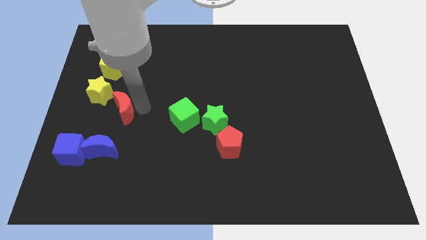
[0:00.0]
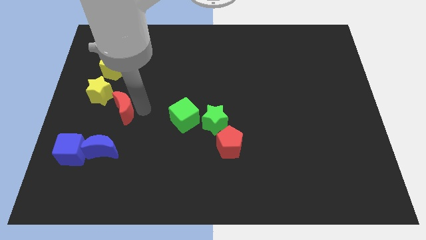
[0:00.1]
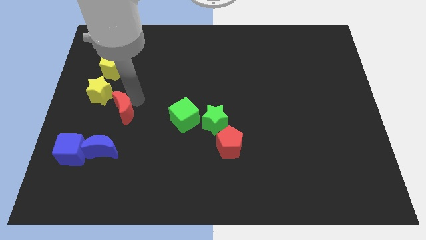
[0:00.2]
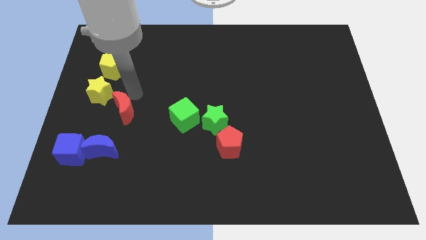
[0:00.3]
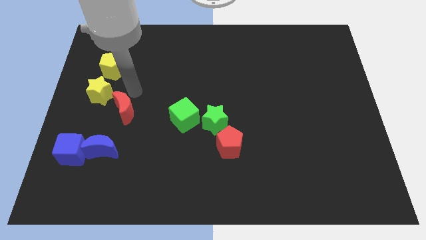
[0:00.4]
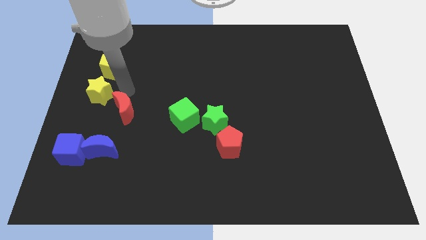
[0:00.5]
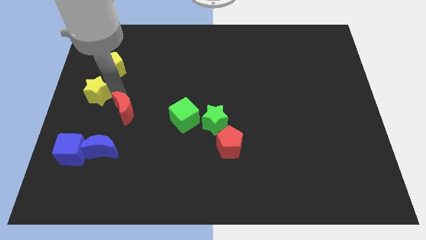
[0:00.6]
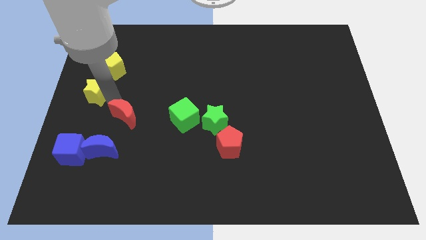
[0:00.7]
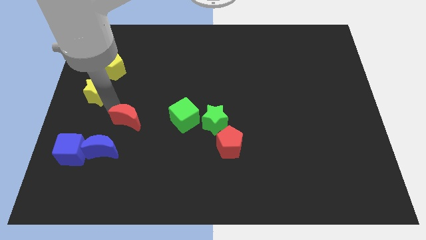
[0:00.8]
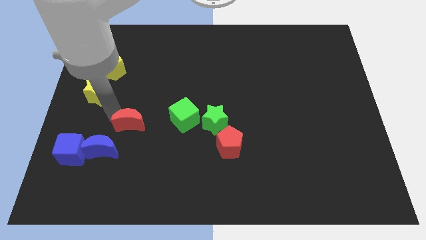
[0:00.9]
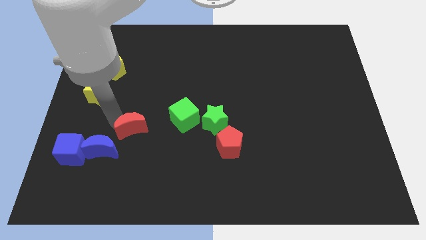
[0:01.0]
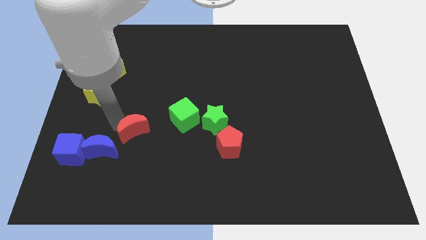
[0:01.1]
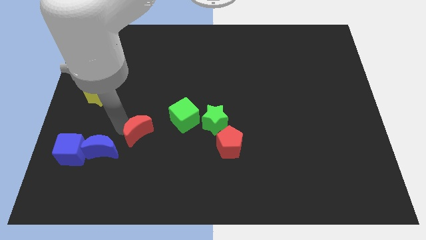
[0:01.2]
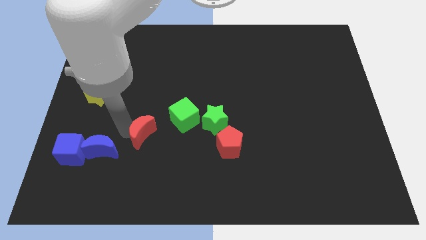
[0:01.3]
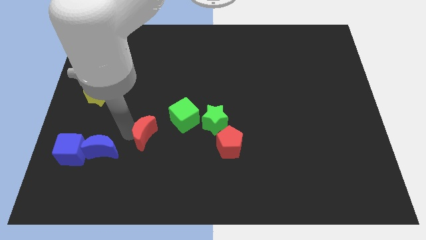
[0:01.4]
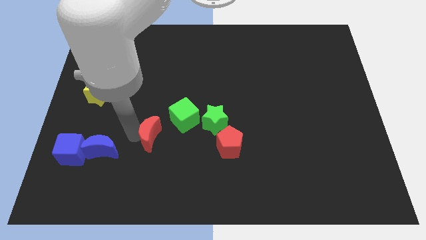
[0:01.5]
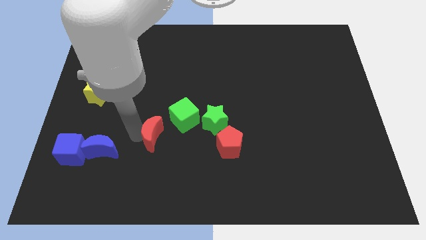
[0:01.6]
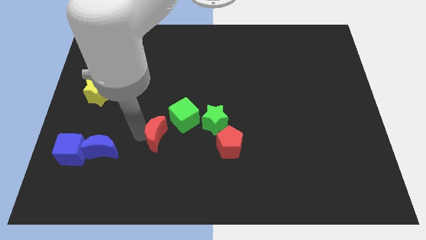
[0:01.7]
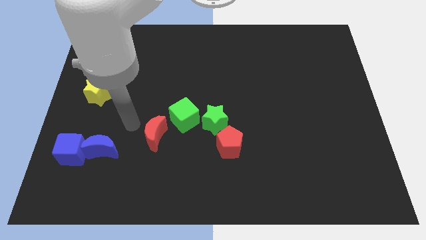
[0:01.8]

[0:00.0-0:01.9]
slide the red moon to the bottom of green cube

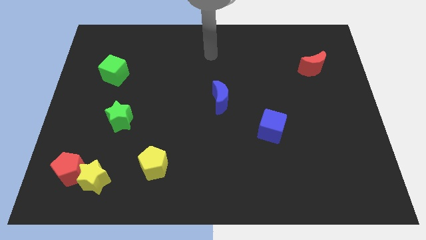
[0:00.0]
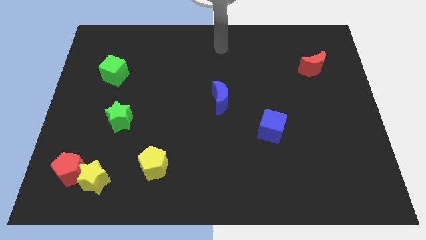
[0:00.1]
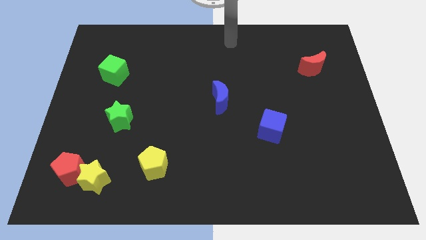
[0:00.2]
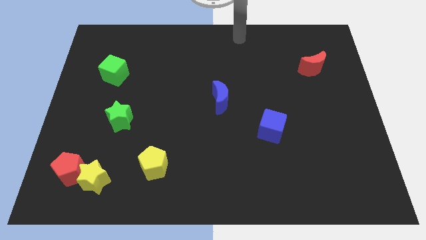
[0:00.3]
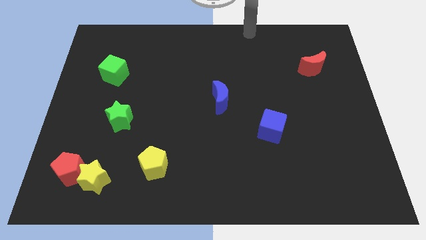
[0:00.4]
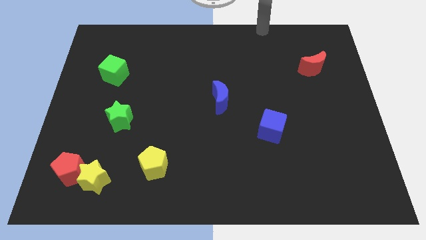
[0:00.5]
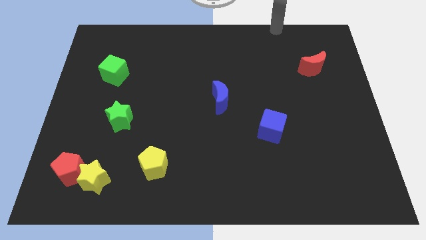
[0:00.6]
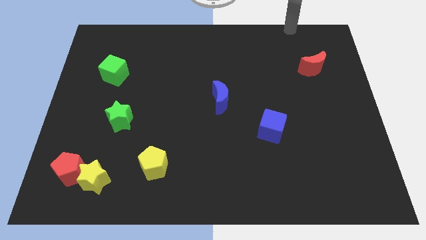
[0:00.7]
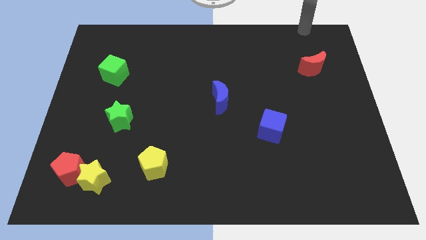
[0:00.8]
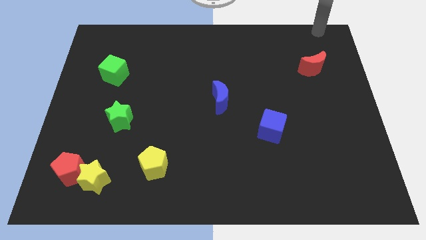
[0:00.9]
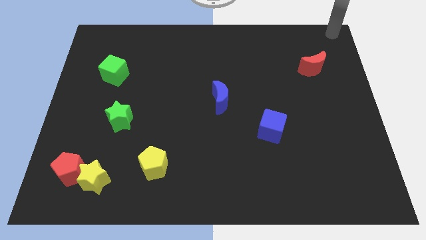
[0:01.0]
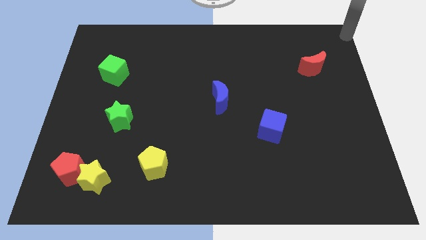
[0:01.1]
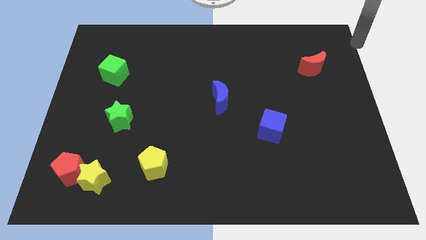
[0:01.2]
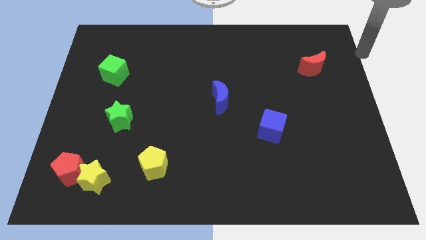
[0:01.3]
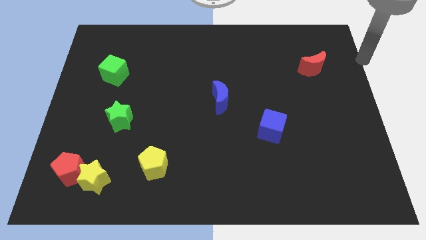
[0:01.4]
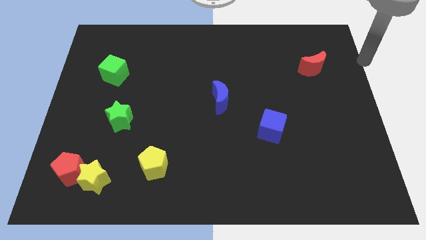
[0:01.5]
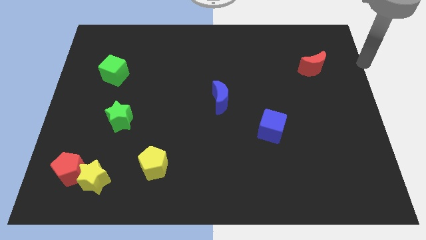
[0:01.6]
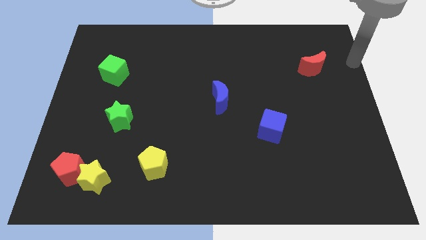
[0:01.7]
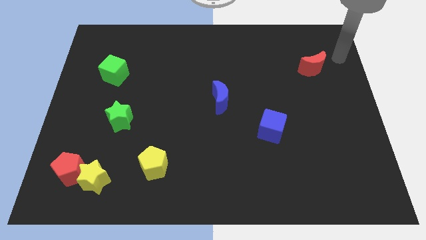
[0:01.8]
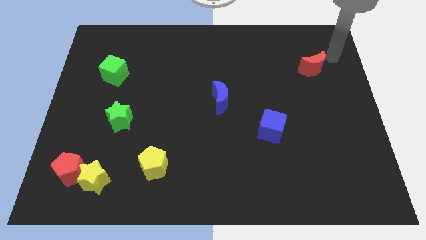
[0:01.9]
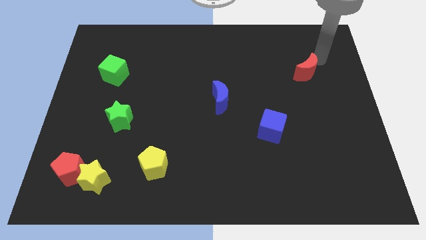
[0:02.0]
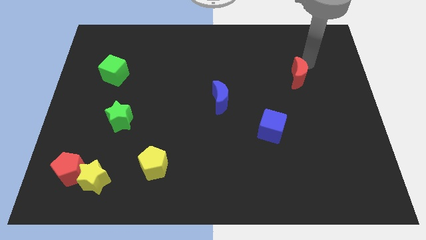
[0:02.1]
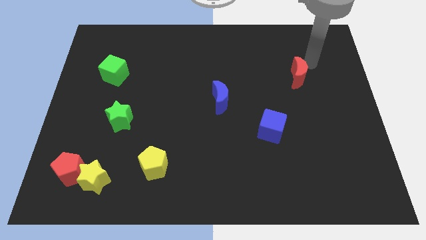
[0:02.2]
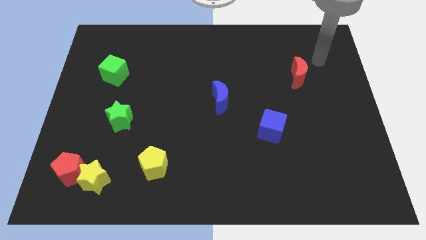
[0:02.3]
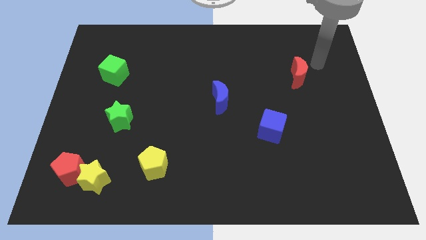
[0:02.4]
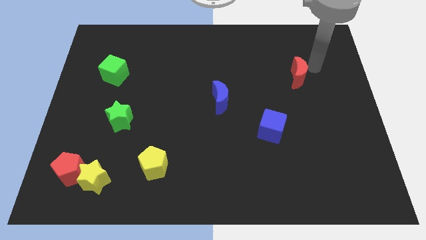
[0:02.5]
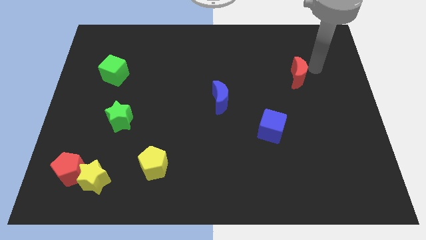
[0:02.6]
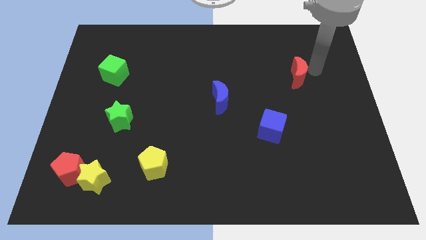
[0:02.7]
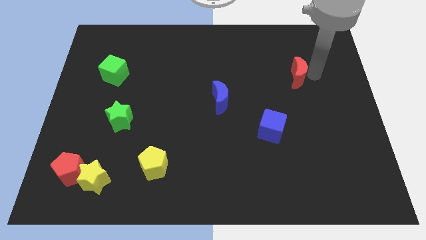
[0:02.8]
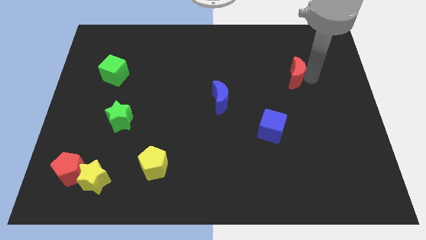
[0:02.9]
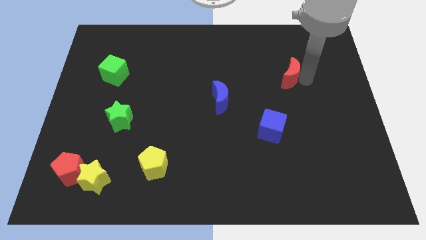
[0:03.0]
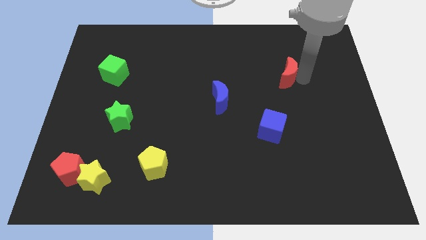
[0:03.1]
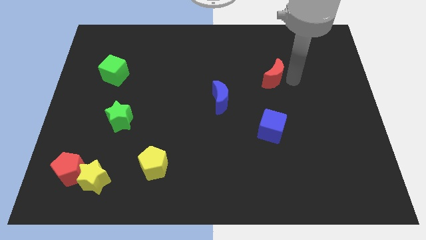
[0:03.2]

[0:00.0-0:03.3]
push the red moon slightly towards the center

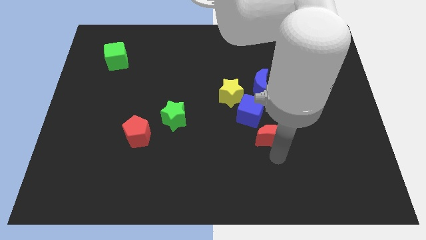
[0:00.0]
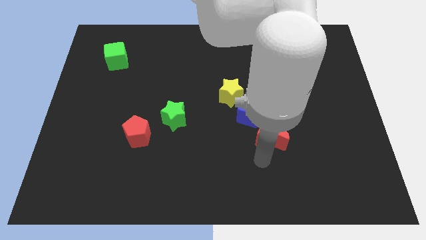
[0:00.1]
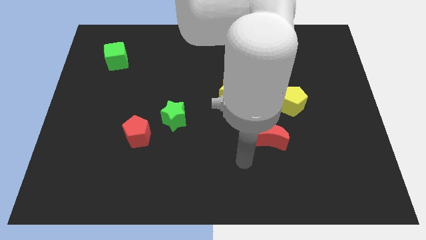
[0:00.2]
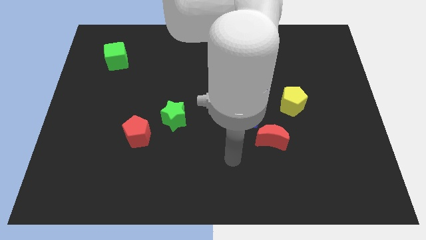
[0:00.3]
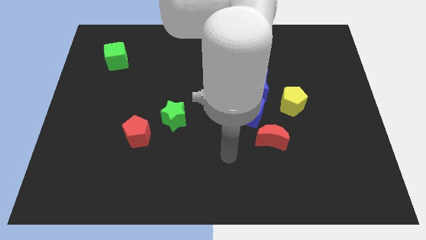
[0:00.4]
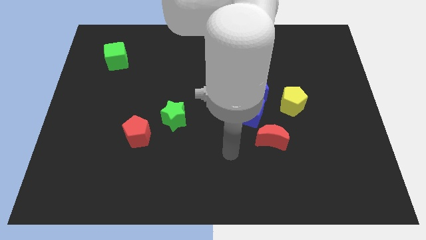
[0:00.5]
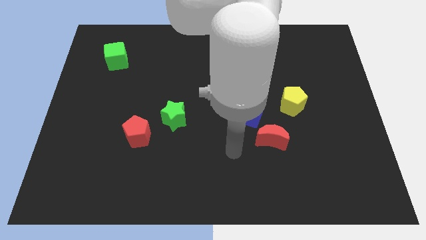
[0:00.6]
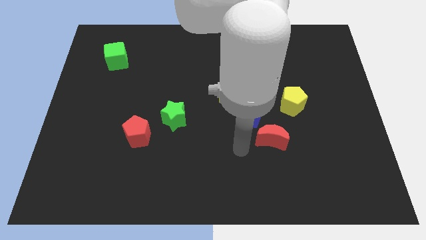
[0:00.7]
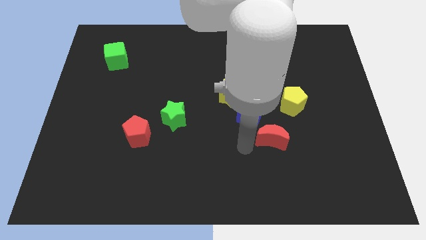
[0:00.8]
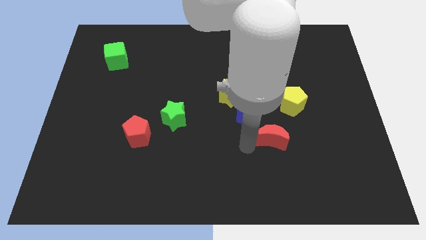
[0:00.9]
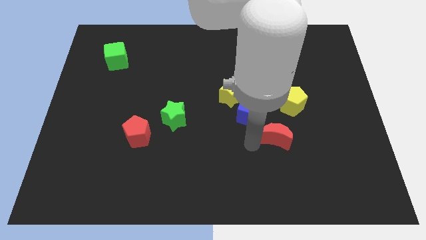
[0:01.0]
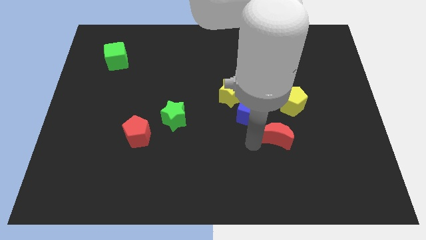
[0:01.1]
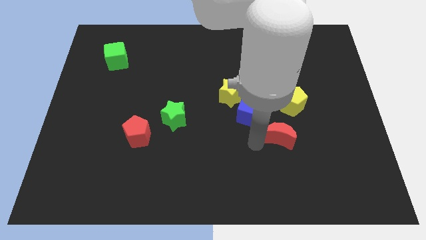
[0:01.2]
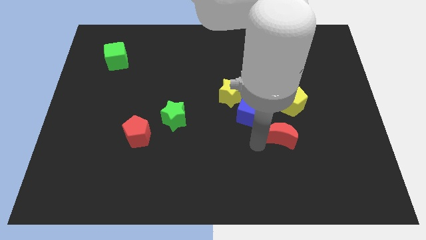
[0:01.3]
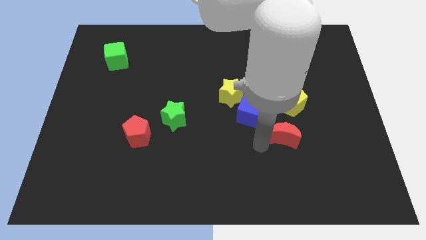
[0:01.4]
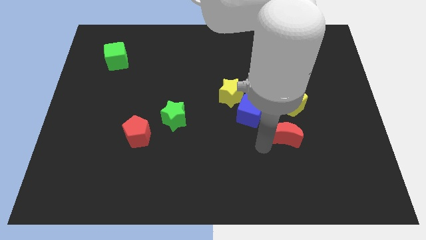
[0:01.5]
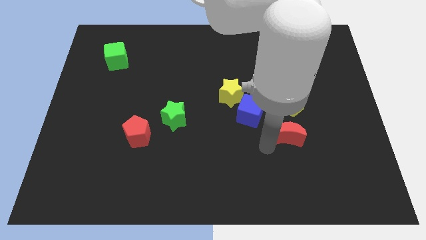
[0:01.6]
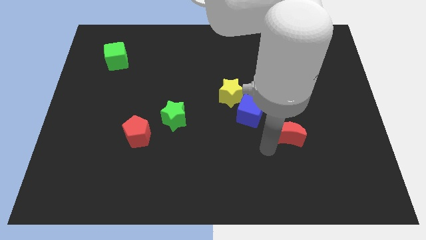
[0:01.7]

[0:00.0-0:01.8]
push the red crescent to the bottom of the yellow pentagon

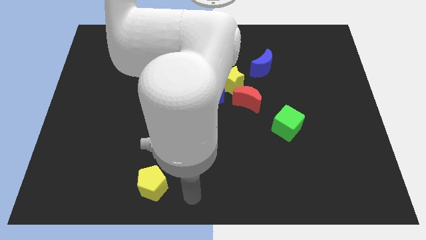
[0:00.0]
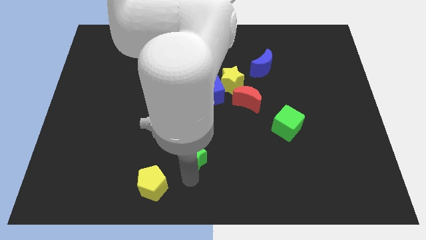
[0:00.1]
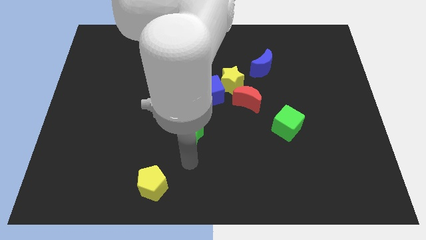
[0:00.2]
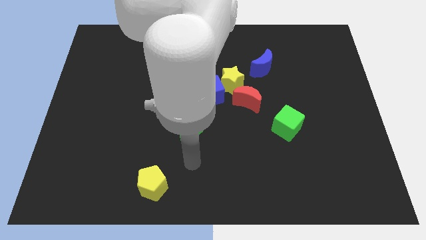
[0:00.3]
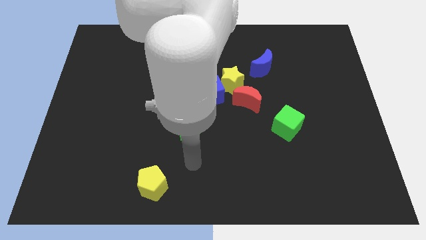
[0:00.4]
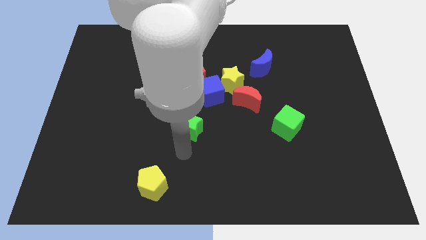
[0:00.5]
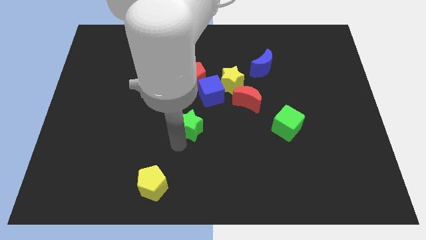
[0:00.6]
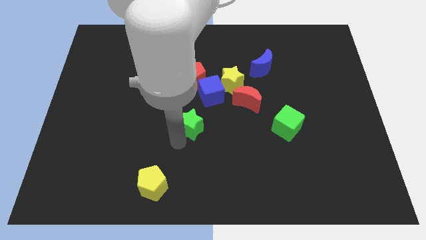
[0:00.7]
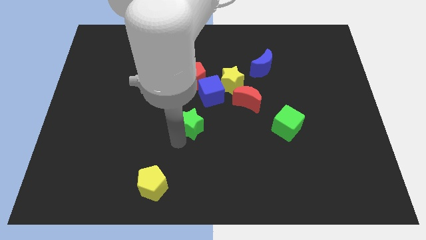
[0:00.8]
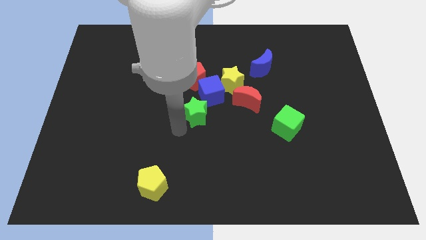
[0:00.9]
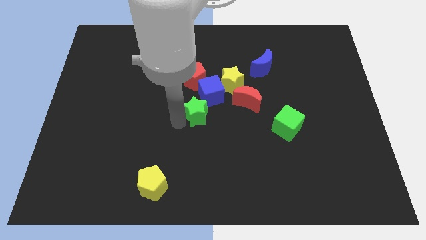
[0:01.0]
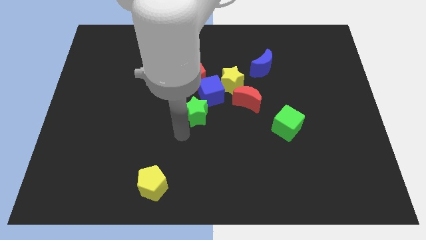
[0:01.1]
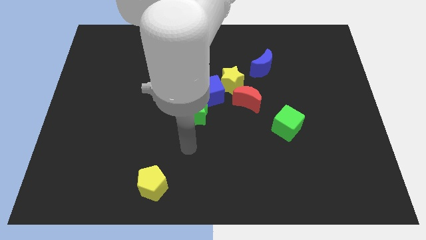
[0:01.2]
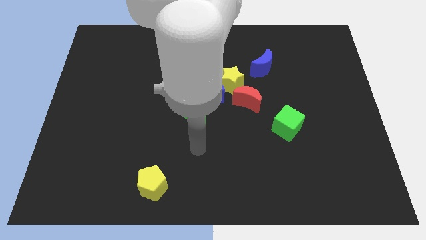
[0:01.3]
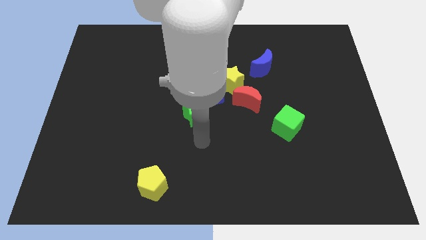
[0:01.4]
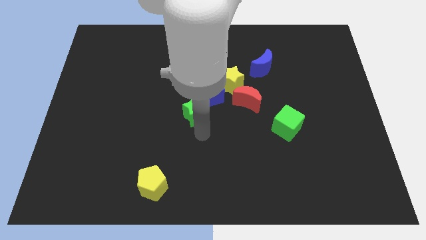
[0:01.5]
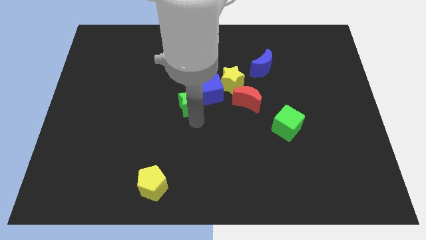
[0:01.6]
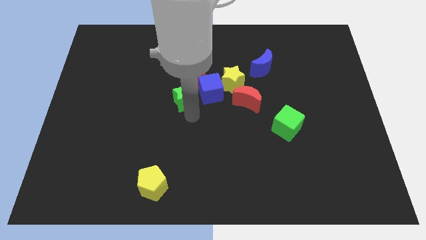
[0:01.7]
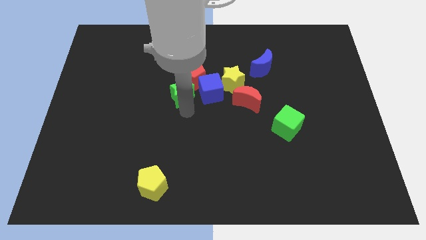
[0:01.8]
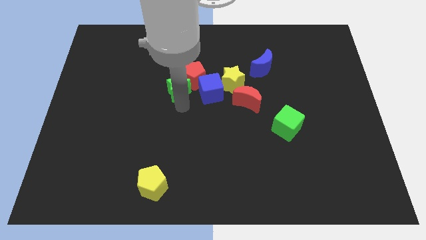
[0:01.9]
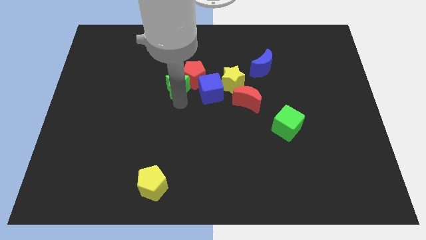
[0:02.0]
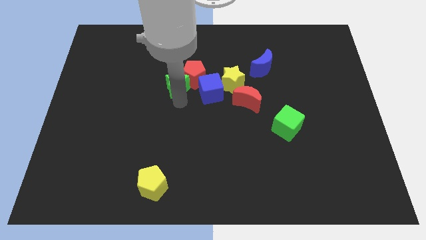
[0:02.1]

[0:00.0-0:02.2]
push the green star close to red pentagon
